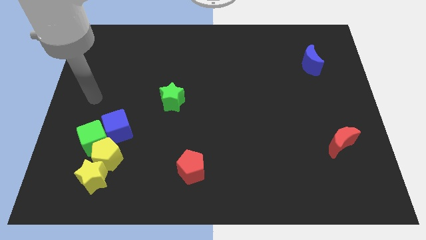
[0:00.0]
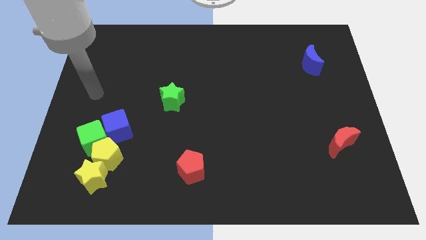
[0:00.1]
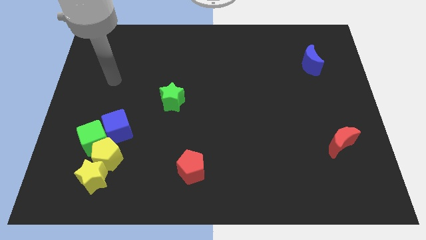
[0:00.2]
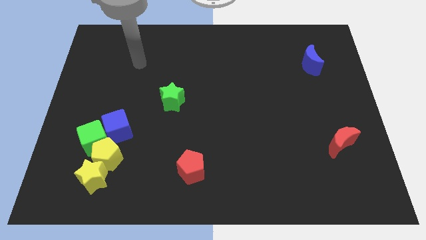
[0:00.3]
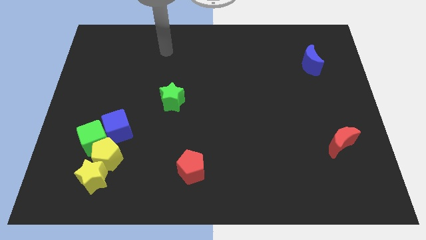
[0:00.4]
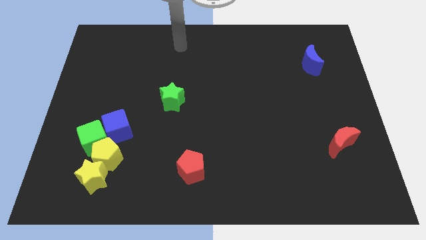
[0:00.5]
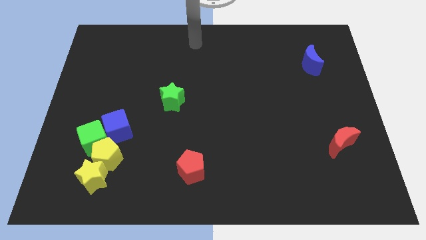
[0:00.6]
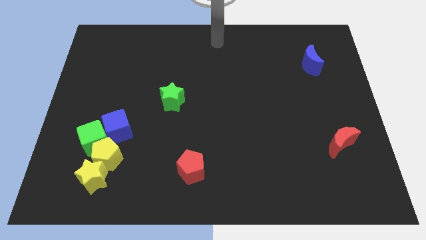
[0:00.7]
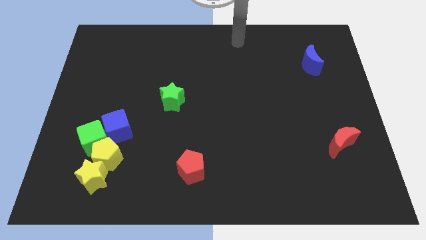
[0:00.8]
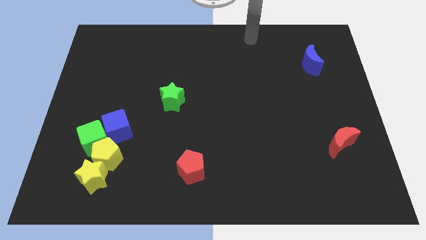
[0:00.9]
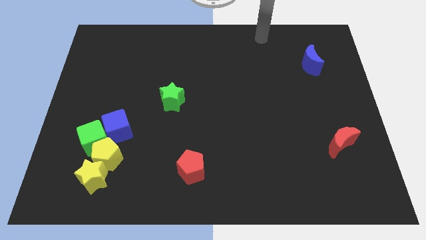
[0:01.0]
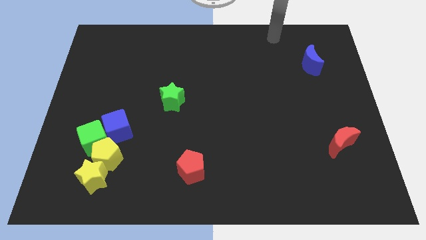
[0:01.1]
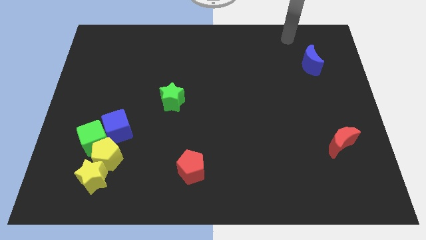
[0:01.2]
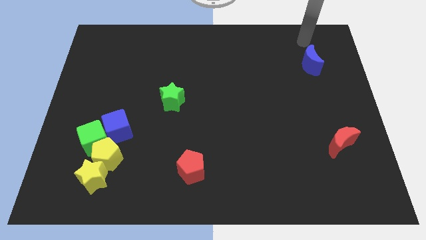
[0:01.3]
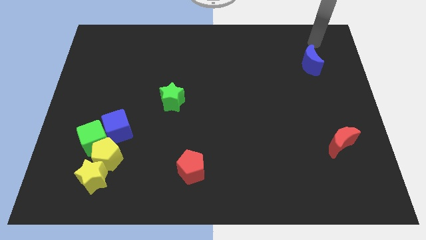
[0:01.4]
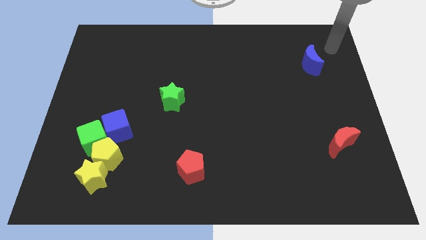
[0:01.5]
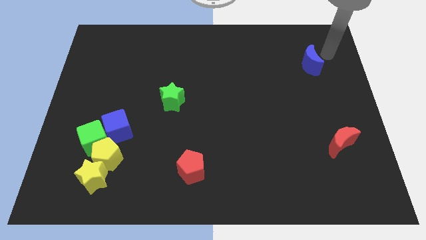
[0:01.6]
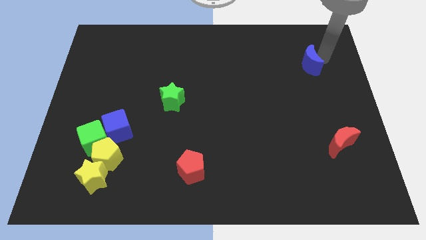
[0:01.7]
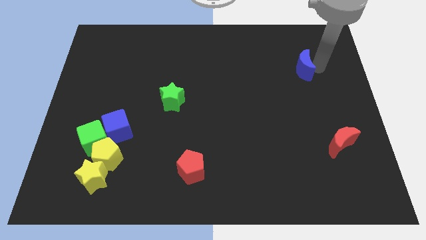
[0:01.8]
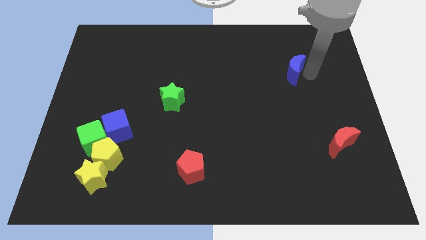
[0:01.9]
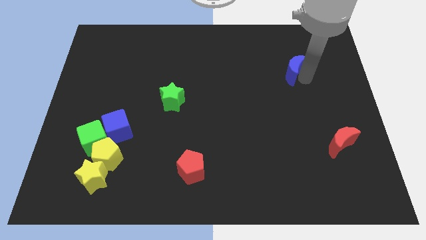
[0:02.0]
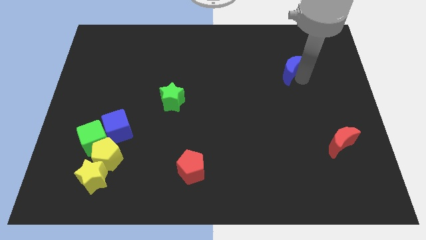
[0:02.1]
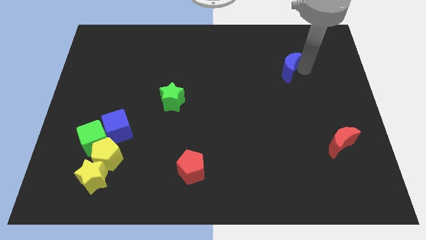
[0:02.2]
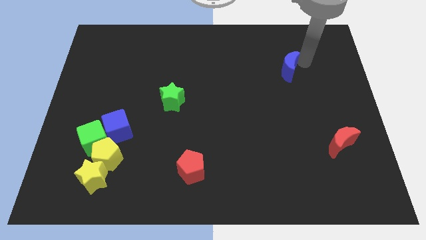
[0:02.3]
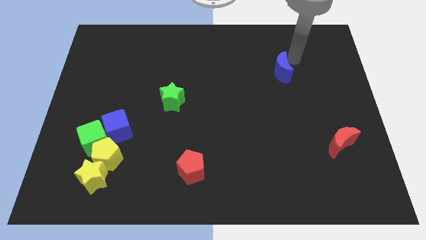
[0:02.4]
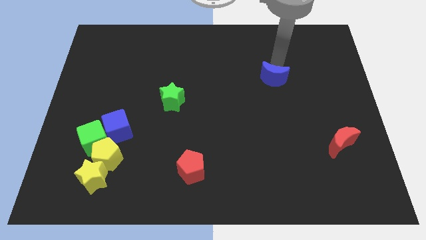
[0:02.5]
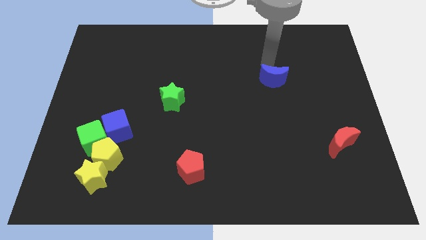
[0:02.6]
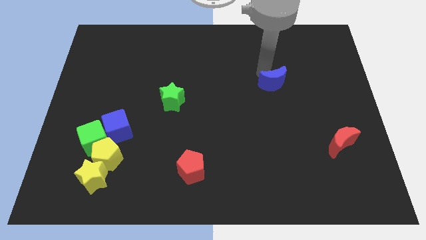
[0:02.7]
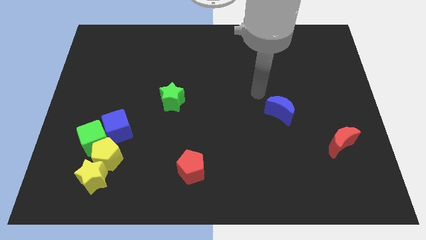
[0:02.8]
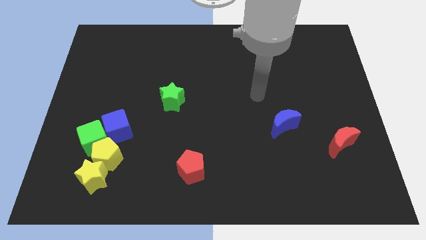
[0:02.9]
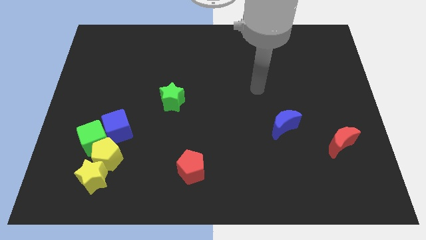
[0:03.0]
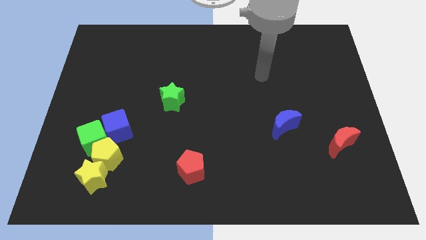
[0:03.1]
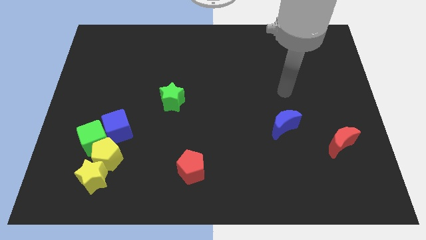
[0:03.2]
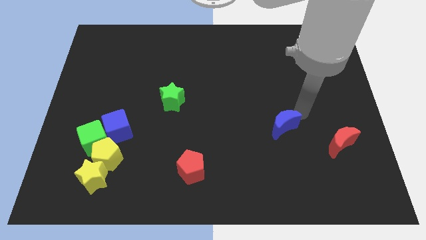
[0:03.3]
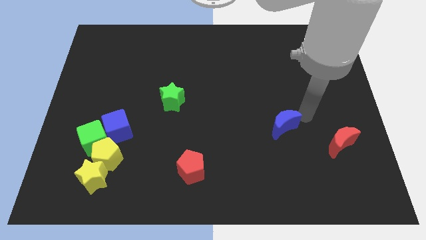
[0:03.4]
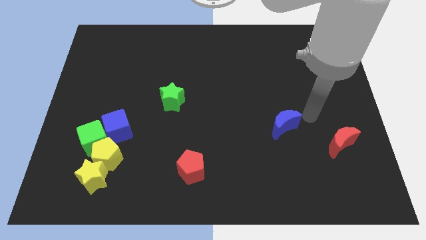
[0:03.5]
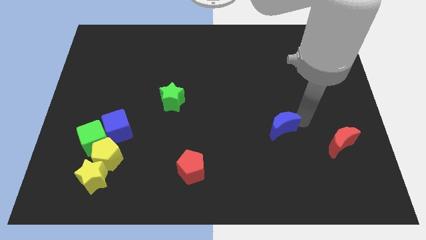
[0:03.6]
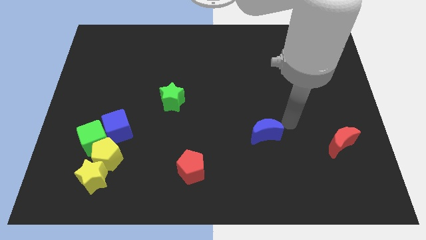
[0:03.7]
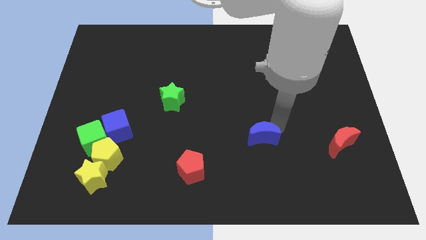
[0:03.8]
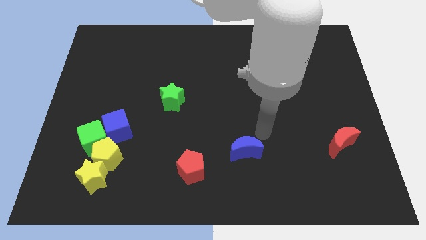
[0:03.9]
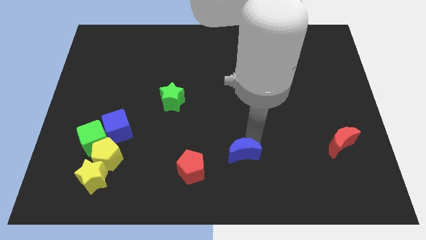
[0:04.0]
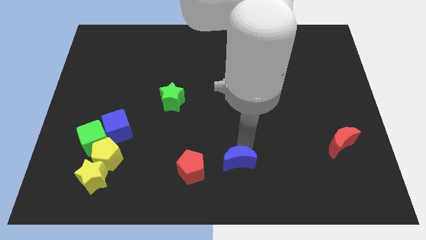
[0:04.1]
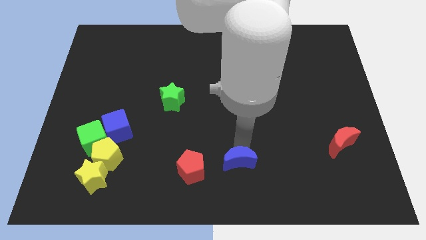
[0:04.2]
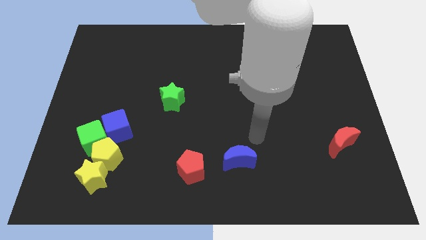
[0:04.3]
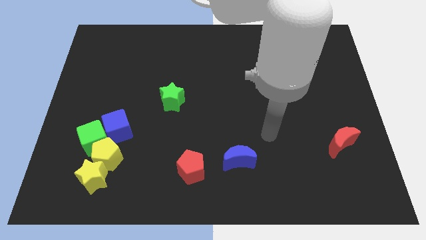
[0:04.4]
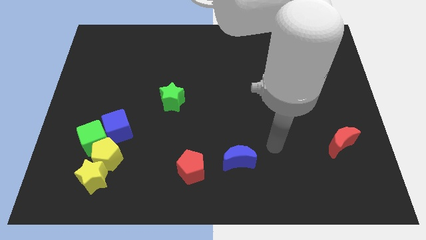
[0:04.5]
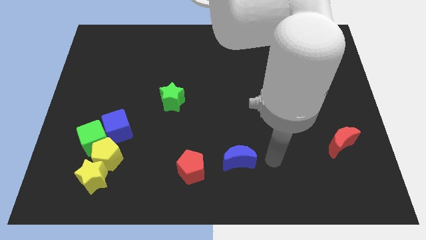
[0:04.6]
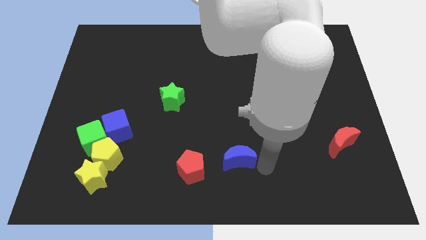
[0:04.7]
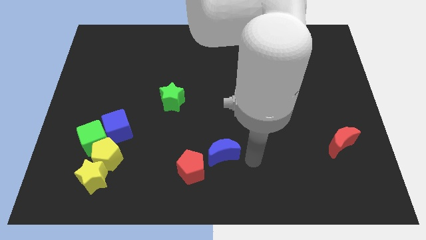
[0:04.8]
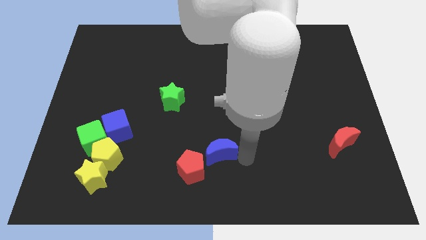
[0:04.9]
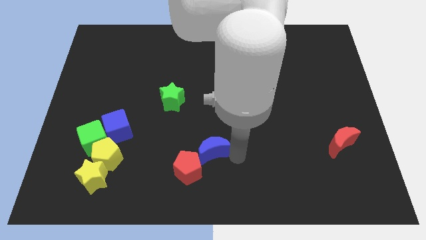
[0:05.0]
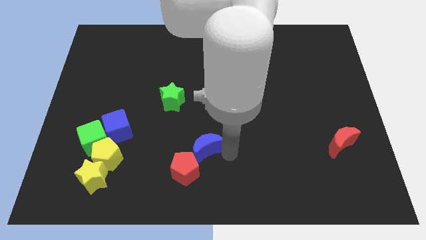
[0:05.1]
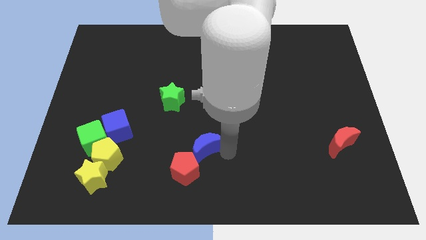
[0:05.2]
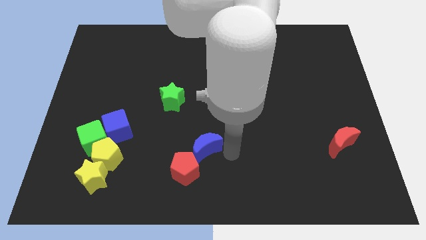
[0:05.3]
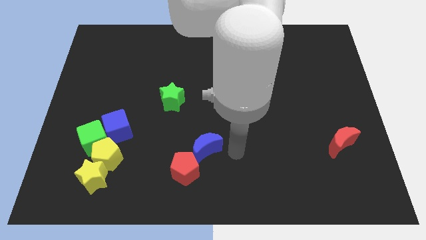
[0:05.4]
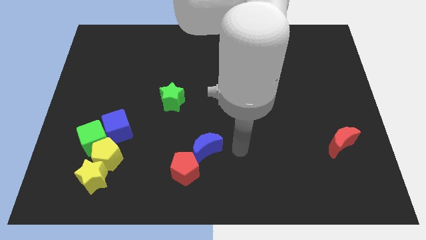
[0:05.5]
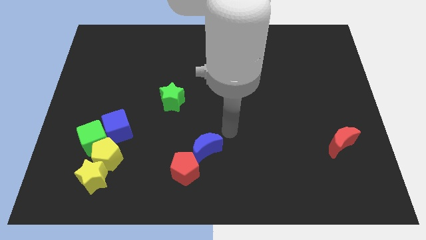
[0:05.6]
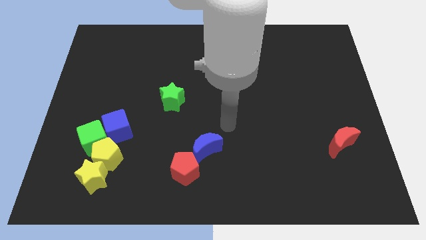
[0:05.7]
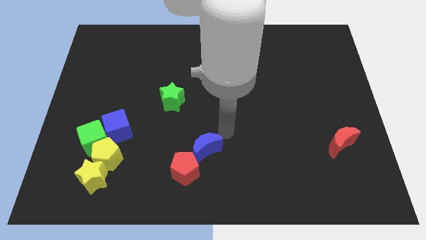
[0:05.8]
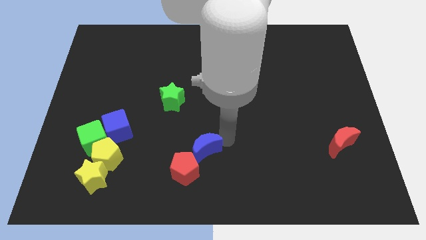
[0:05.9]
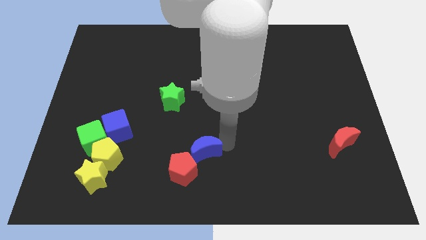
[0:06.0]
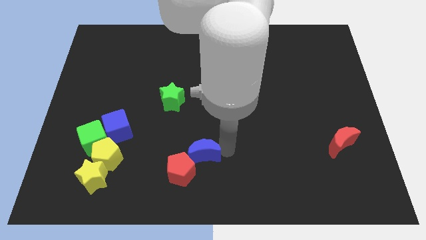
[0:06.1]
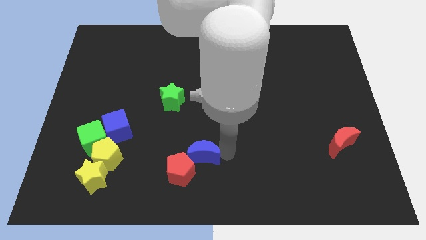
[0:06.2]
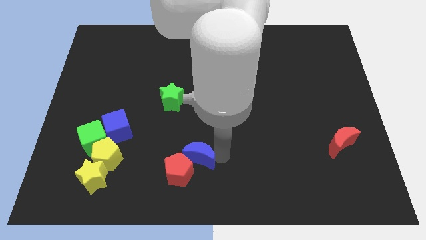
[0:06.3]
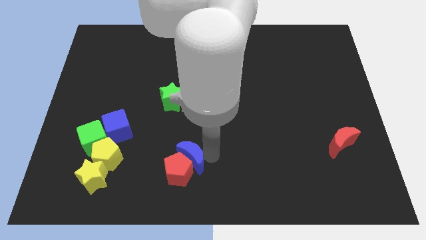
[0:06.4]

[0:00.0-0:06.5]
slide the blue moon to the red pentagon

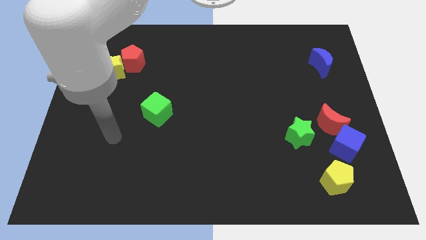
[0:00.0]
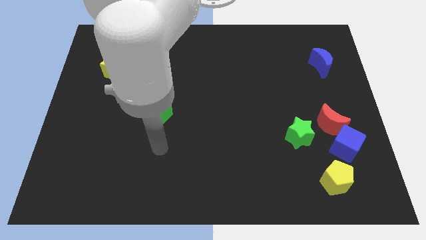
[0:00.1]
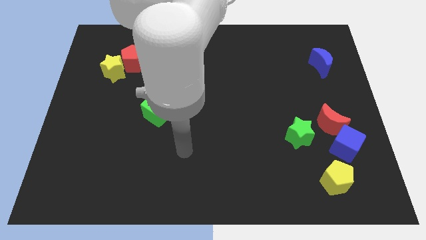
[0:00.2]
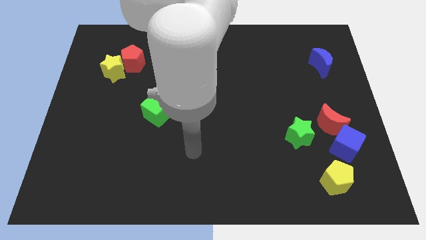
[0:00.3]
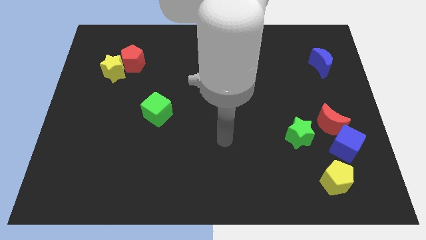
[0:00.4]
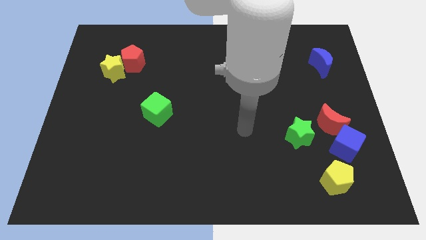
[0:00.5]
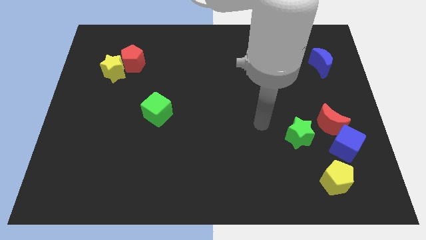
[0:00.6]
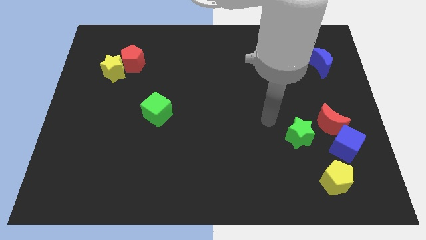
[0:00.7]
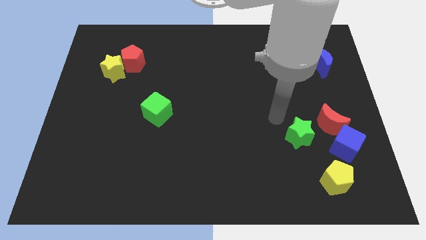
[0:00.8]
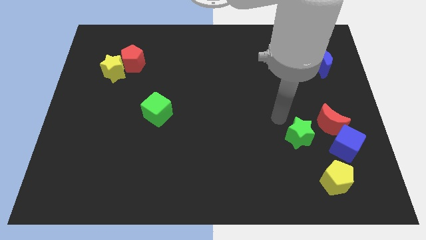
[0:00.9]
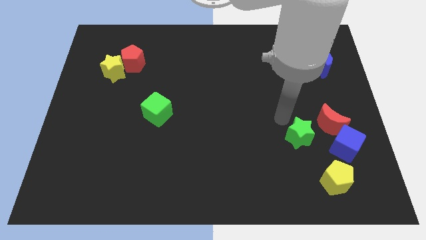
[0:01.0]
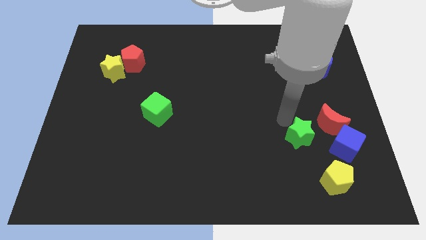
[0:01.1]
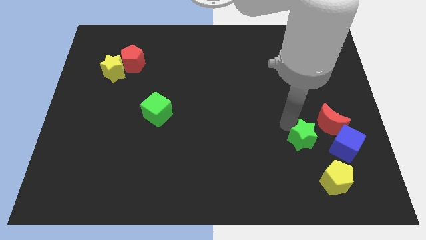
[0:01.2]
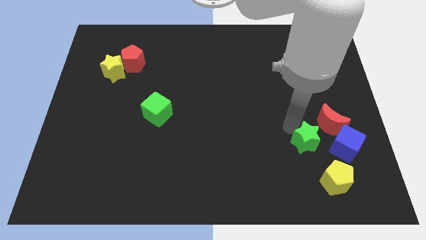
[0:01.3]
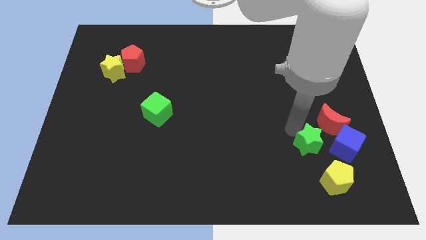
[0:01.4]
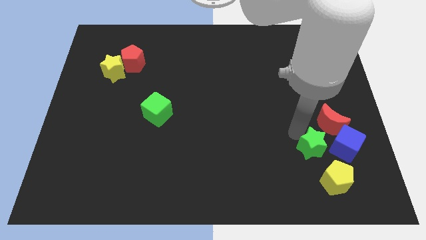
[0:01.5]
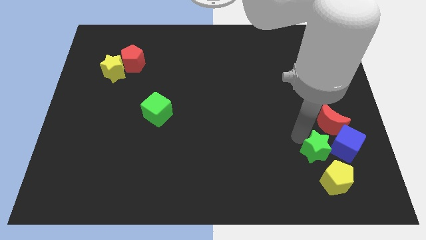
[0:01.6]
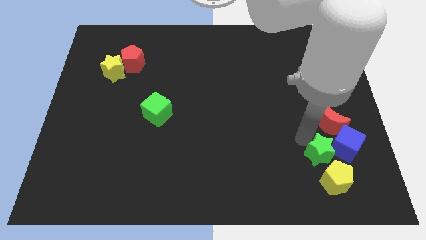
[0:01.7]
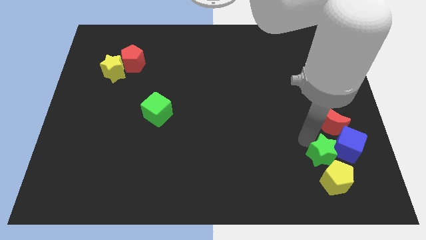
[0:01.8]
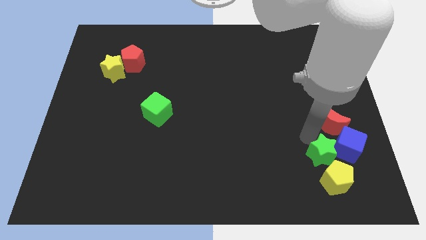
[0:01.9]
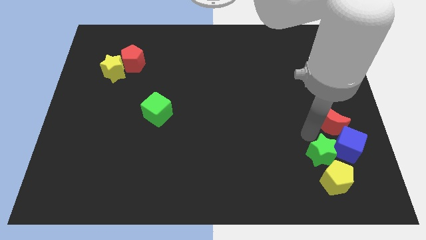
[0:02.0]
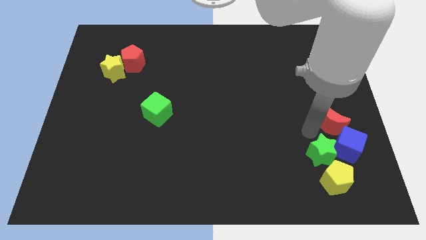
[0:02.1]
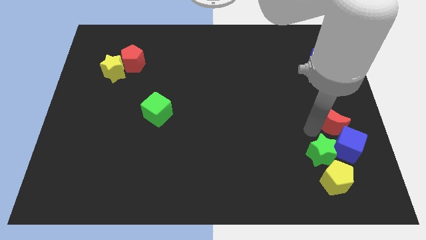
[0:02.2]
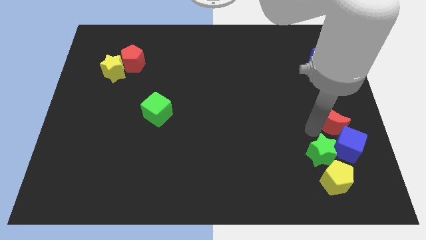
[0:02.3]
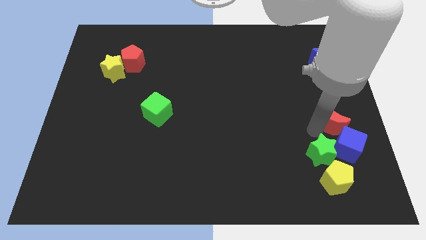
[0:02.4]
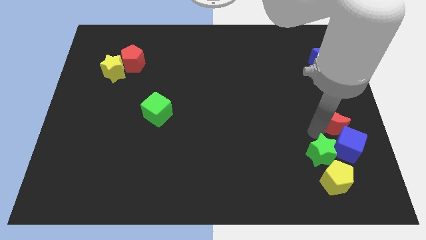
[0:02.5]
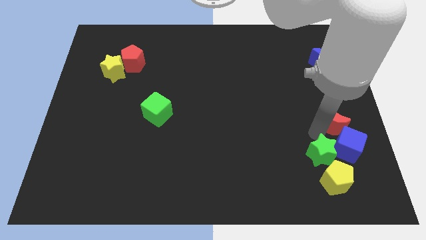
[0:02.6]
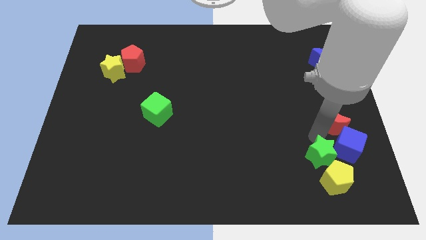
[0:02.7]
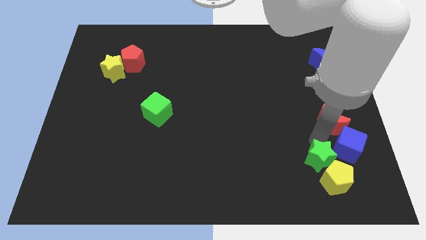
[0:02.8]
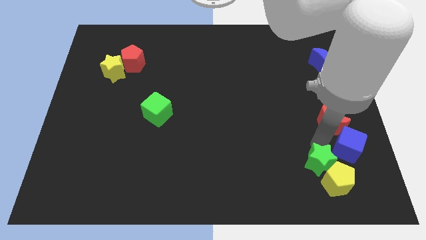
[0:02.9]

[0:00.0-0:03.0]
push the green star next to the yellow pentagon
